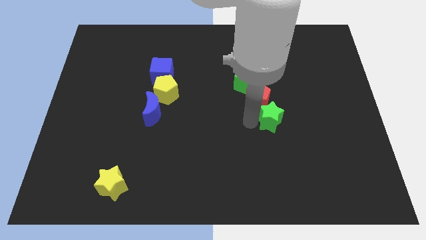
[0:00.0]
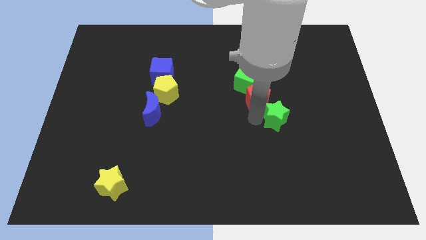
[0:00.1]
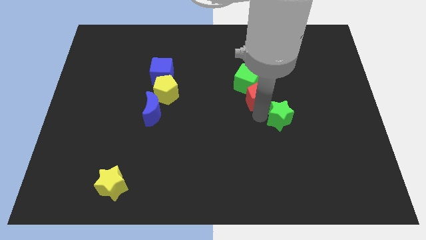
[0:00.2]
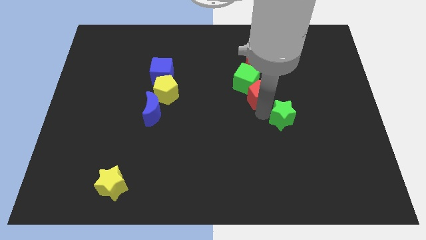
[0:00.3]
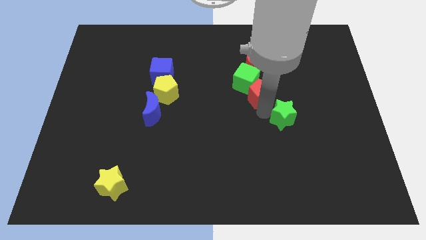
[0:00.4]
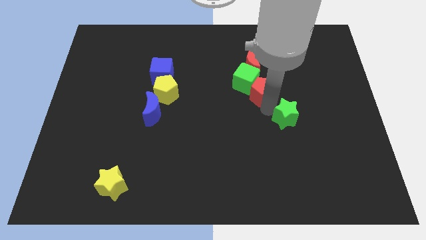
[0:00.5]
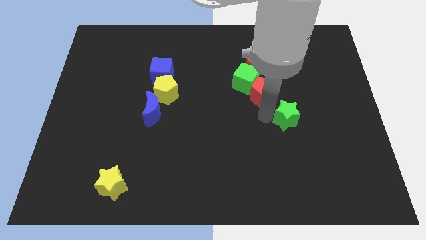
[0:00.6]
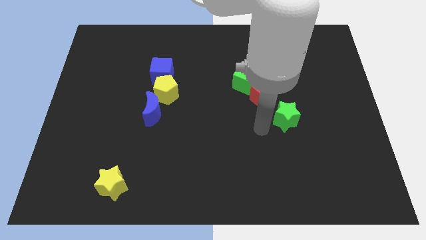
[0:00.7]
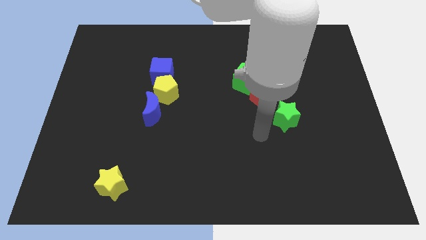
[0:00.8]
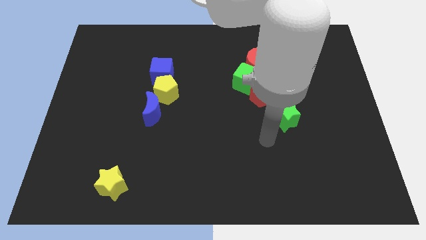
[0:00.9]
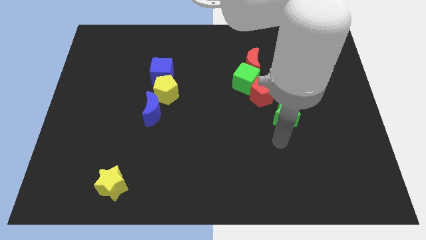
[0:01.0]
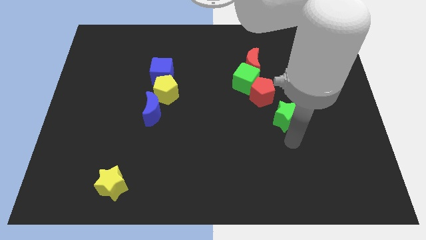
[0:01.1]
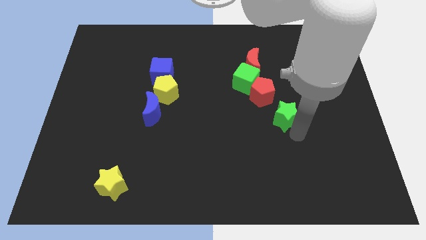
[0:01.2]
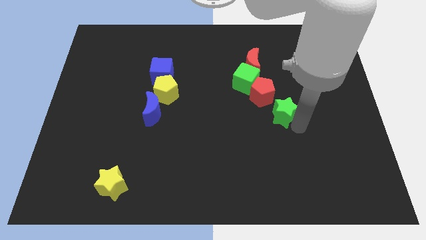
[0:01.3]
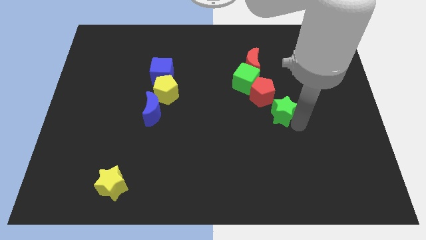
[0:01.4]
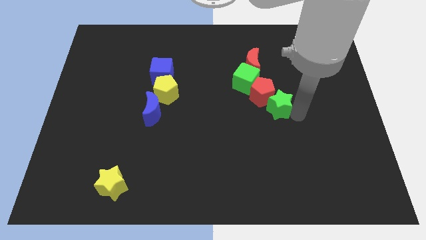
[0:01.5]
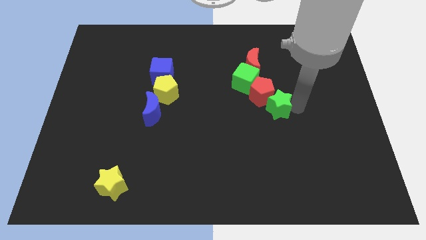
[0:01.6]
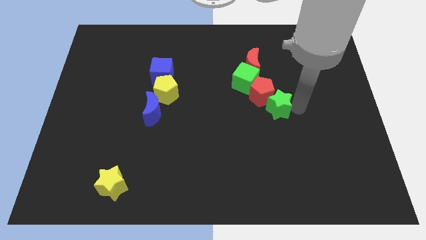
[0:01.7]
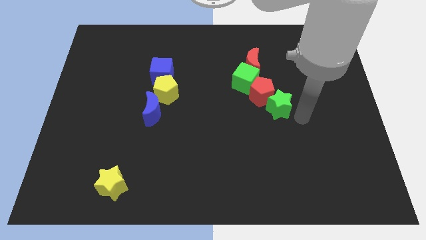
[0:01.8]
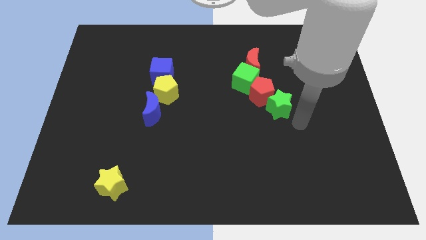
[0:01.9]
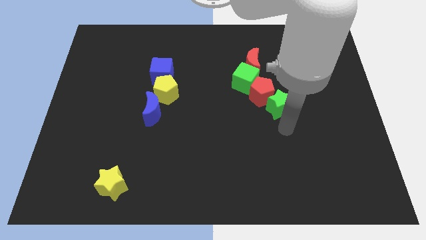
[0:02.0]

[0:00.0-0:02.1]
move green star into red pentagon

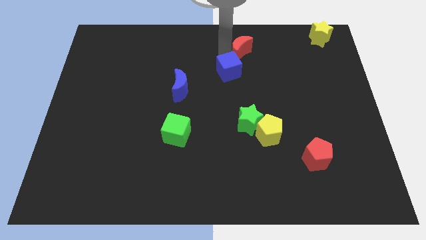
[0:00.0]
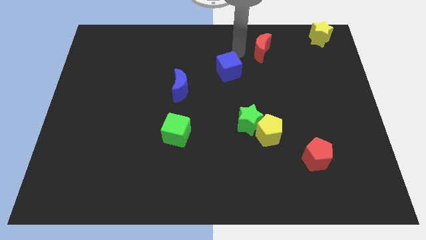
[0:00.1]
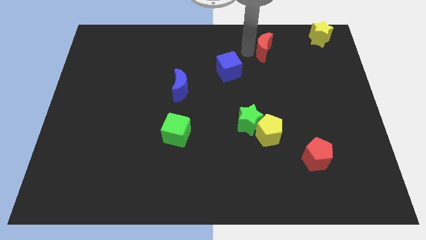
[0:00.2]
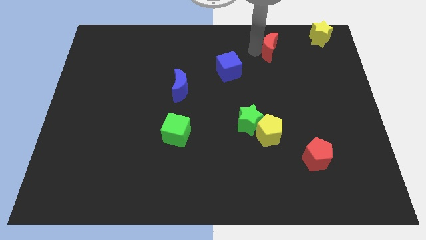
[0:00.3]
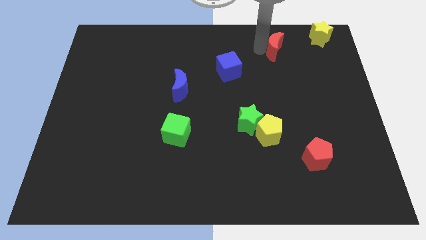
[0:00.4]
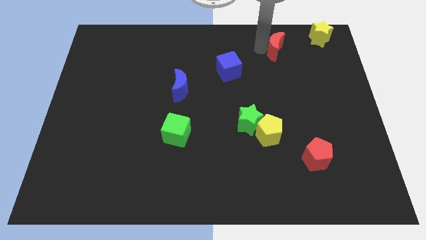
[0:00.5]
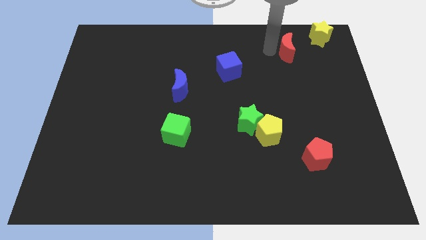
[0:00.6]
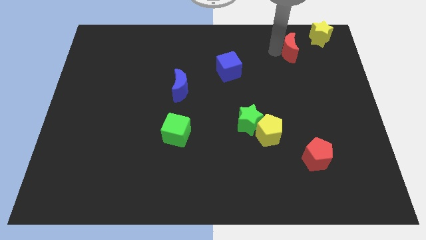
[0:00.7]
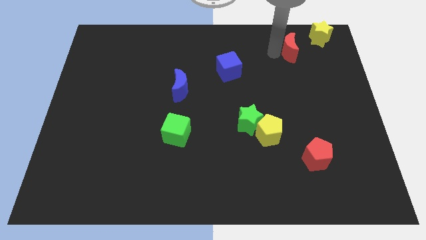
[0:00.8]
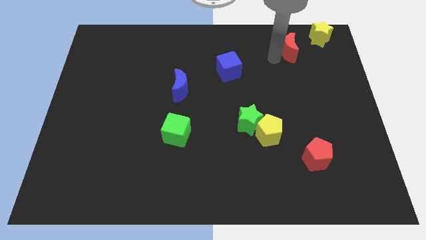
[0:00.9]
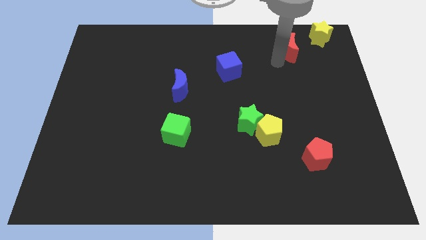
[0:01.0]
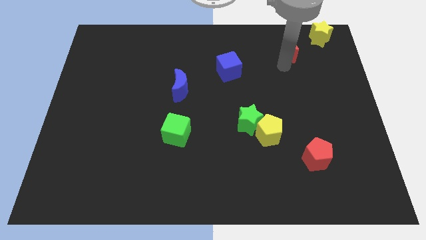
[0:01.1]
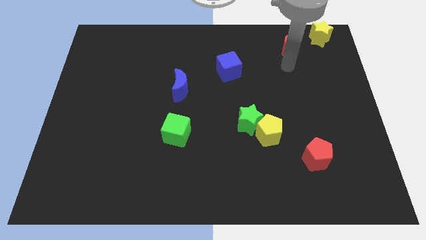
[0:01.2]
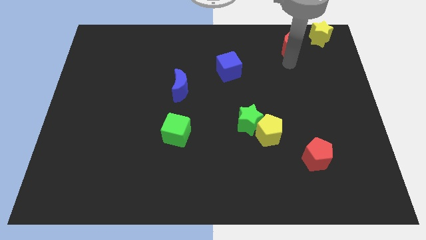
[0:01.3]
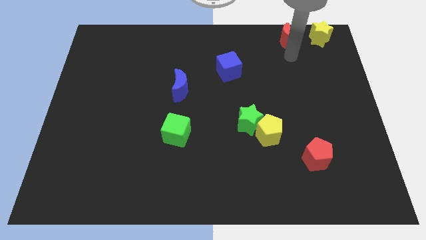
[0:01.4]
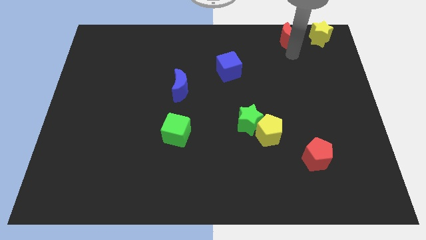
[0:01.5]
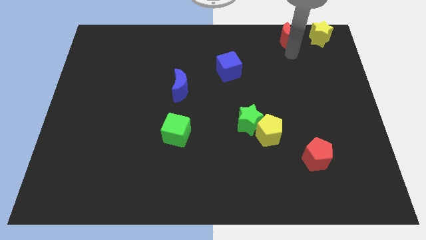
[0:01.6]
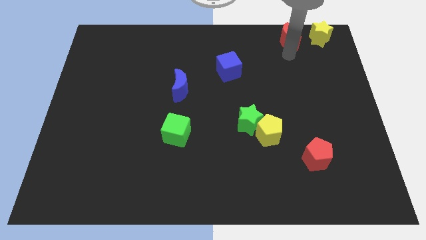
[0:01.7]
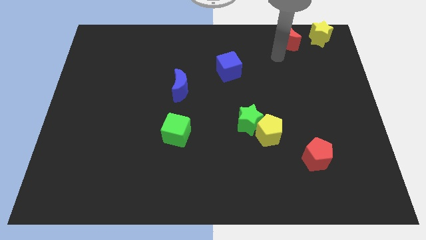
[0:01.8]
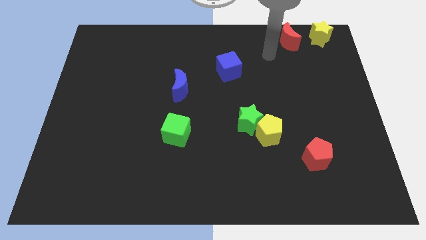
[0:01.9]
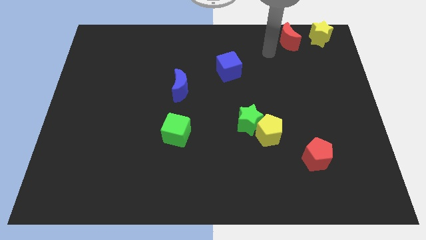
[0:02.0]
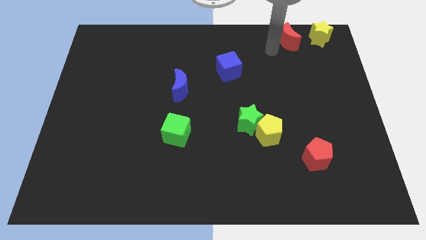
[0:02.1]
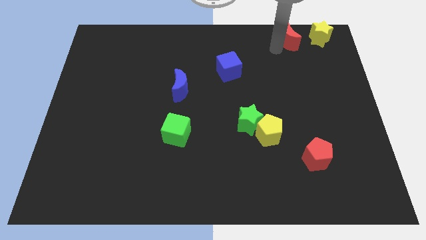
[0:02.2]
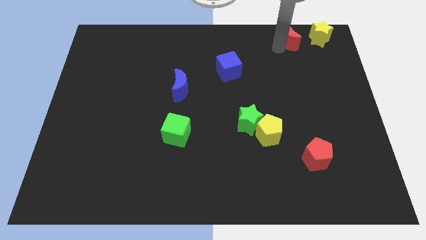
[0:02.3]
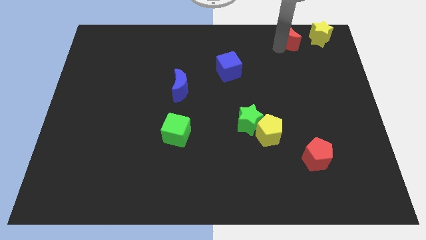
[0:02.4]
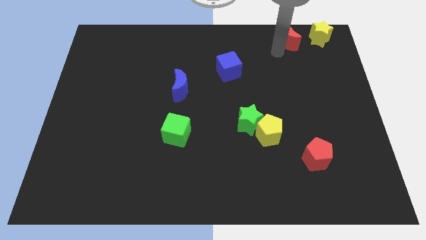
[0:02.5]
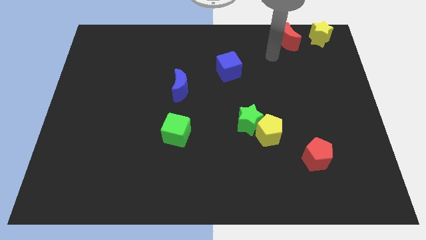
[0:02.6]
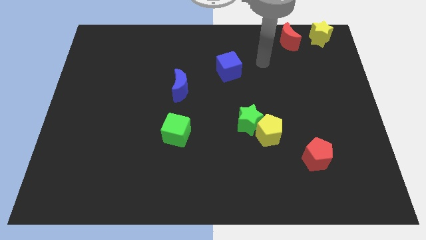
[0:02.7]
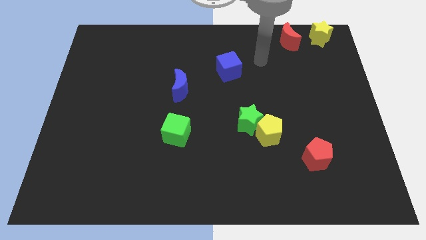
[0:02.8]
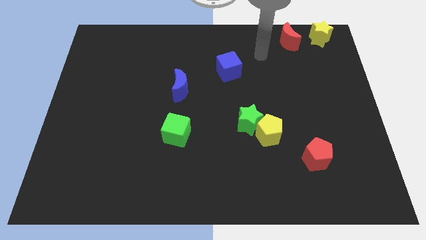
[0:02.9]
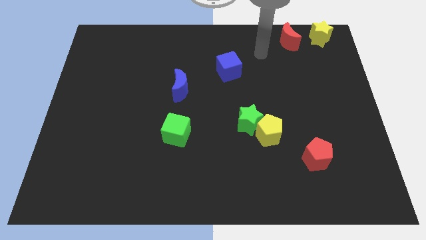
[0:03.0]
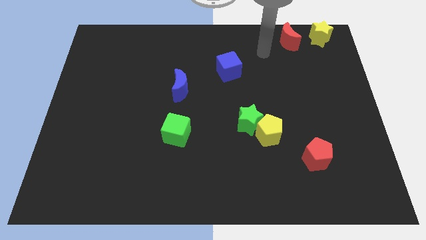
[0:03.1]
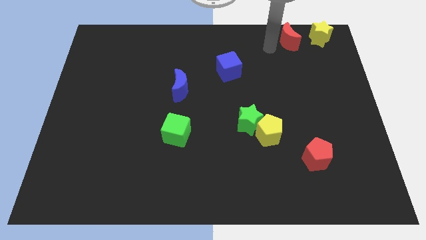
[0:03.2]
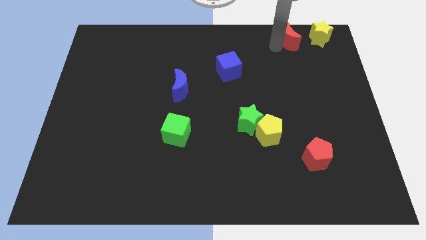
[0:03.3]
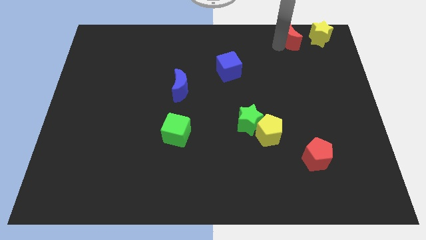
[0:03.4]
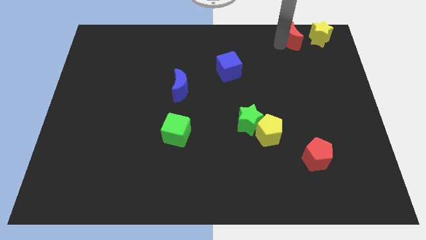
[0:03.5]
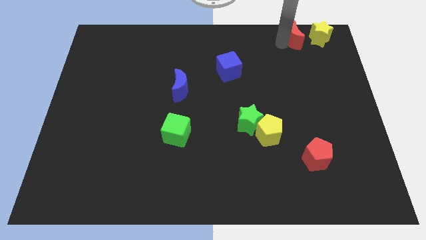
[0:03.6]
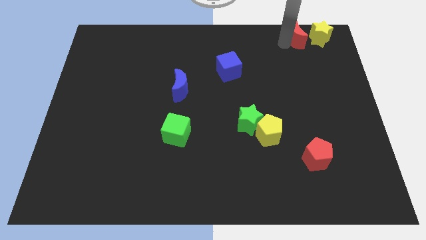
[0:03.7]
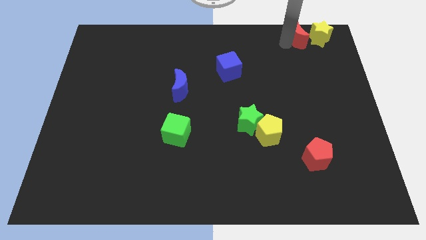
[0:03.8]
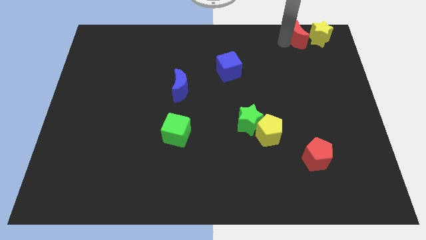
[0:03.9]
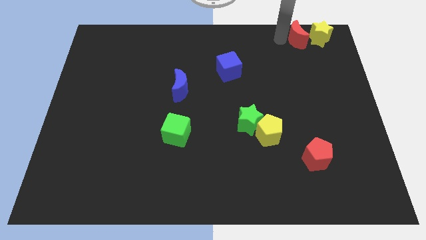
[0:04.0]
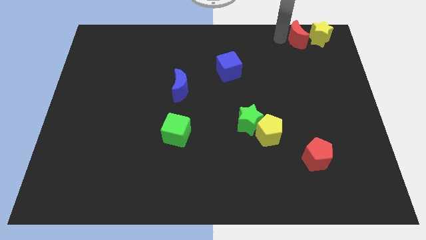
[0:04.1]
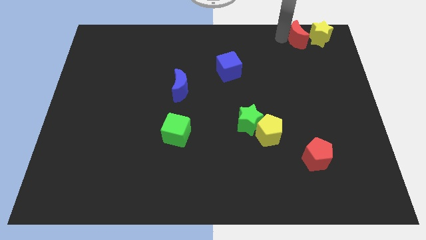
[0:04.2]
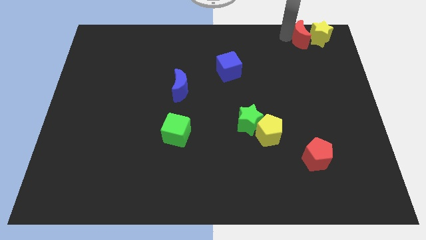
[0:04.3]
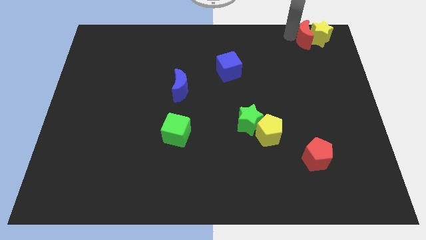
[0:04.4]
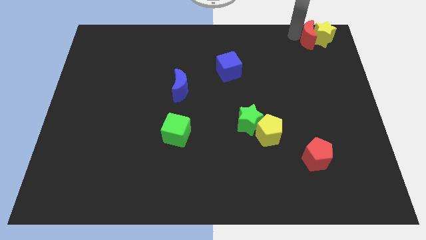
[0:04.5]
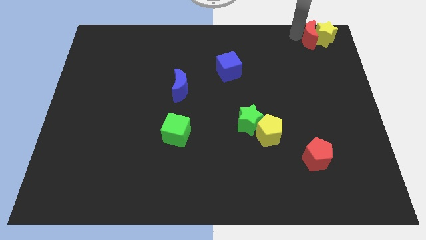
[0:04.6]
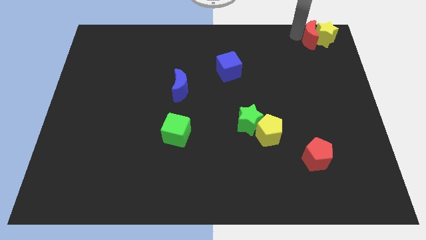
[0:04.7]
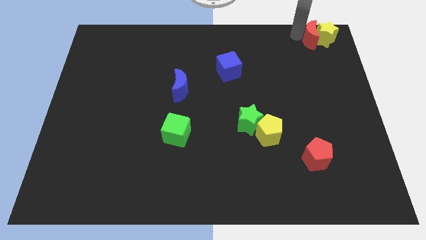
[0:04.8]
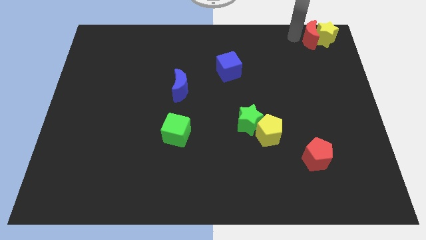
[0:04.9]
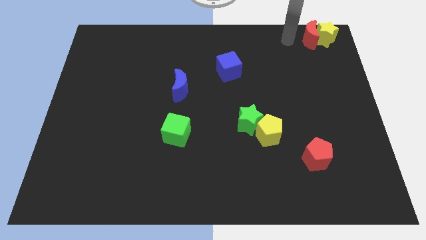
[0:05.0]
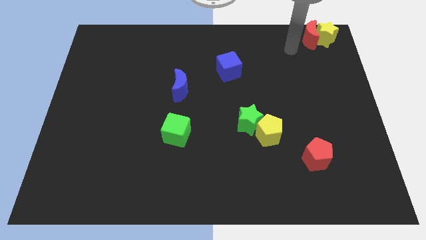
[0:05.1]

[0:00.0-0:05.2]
move the red crescent to the left side of the yellow star

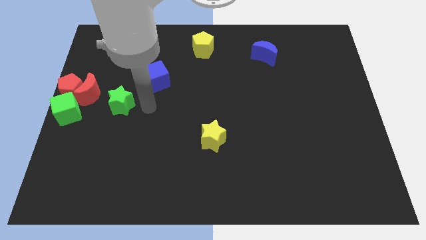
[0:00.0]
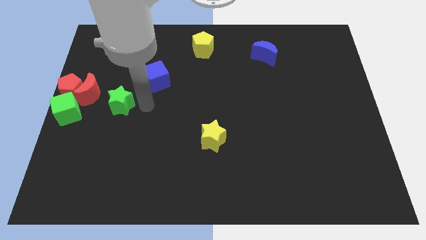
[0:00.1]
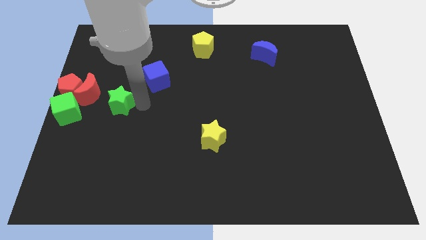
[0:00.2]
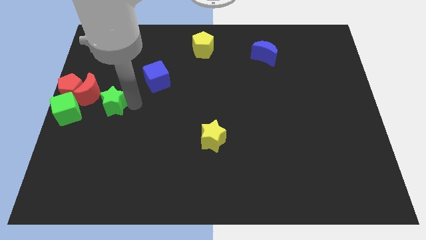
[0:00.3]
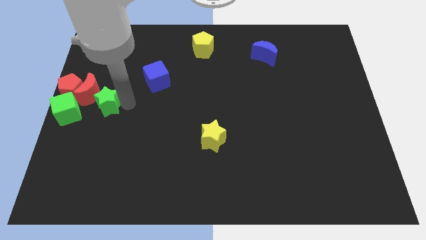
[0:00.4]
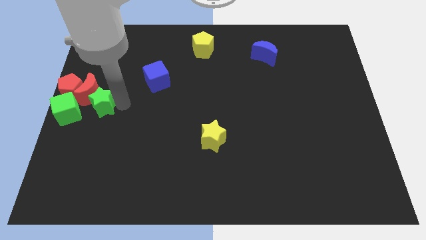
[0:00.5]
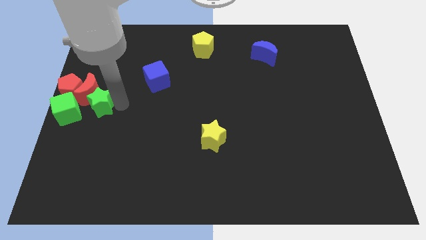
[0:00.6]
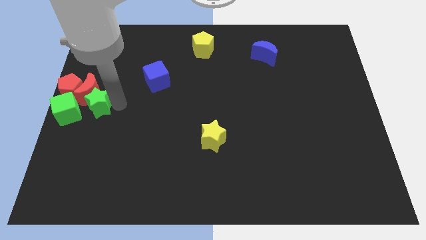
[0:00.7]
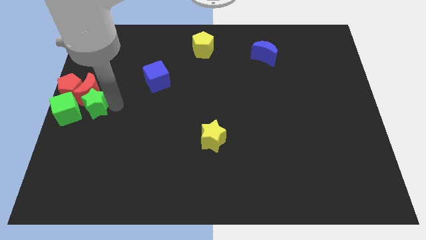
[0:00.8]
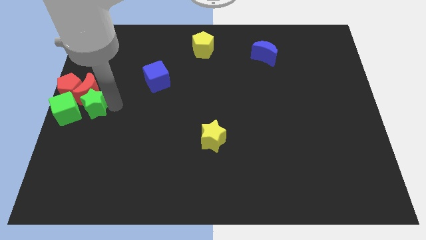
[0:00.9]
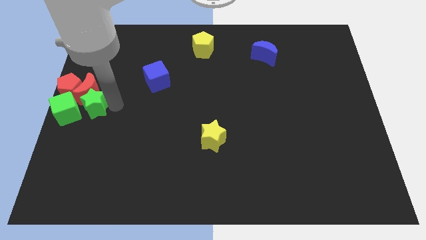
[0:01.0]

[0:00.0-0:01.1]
push the green star into the red moon

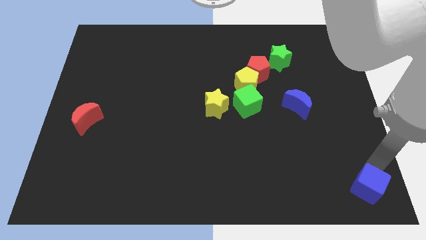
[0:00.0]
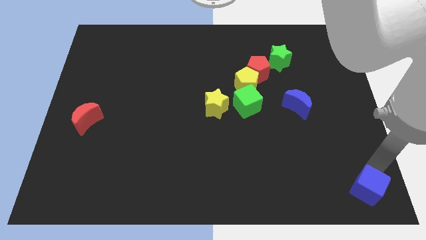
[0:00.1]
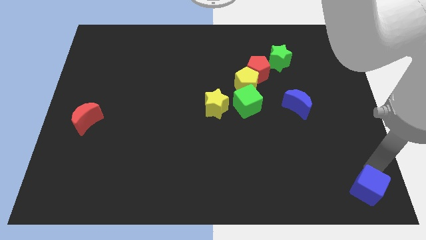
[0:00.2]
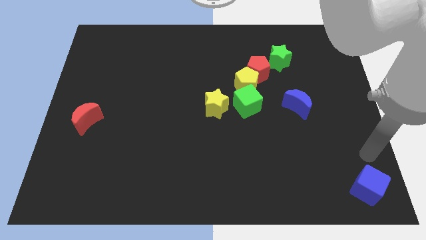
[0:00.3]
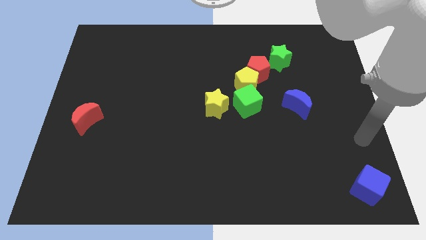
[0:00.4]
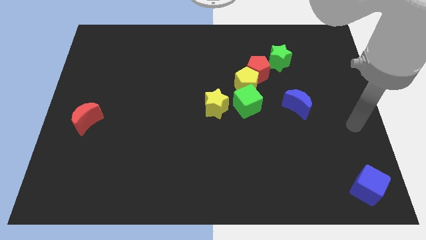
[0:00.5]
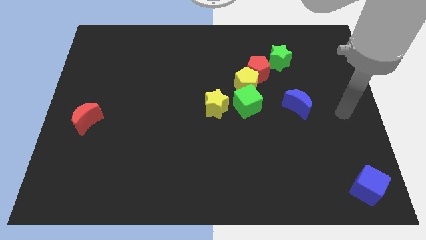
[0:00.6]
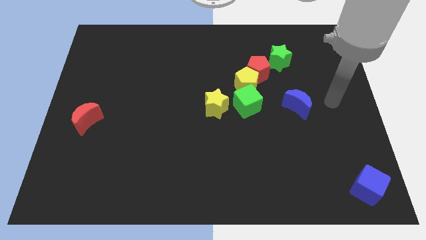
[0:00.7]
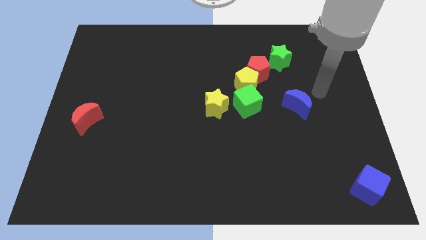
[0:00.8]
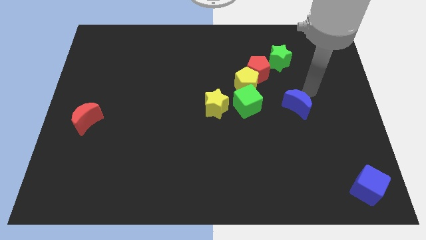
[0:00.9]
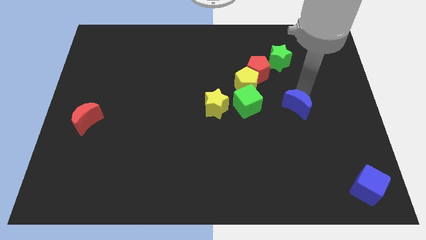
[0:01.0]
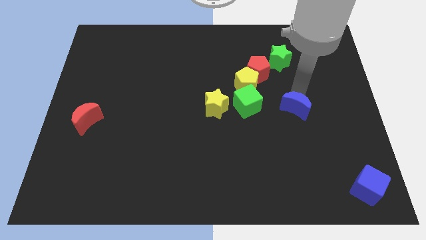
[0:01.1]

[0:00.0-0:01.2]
move your arm away from blue cube
